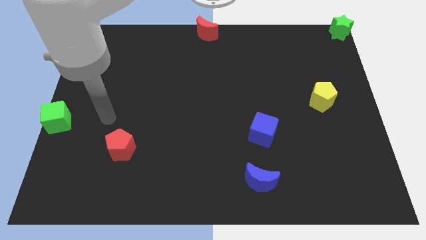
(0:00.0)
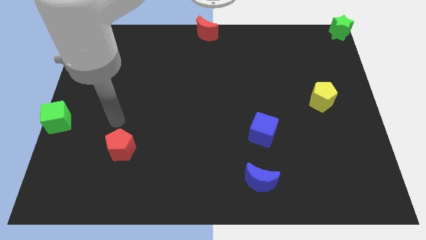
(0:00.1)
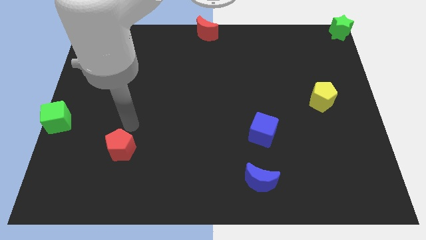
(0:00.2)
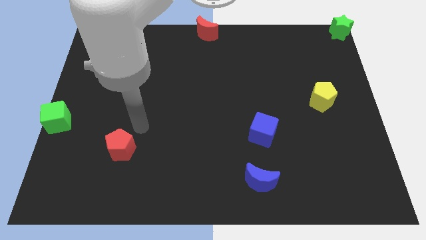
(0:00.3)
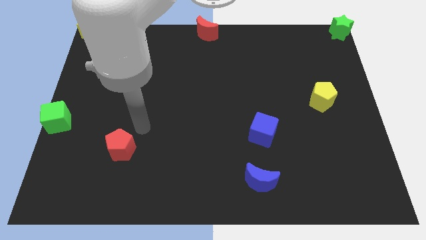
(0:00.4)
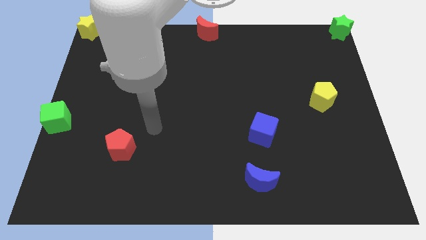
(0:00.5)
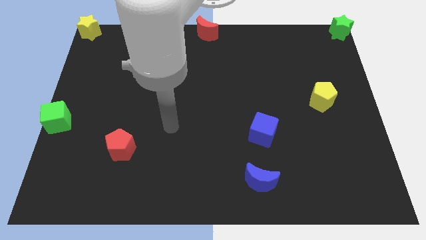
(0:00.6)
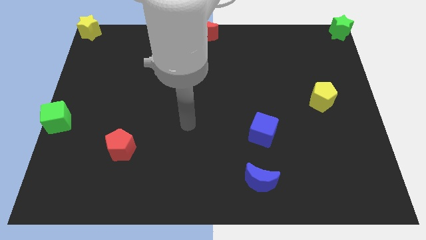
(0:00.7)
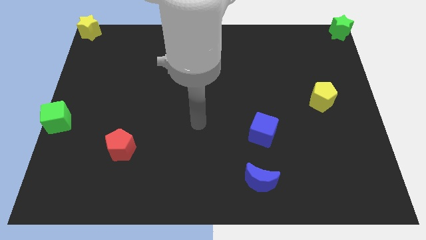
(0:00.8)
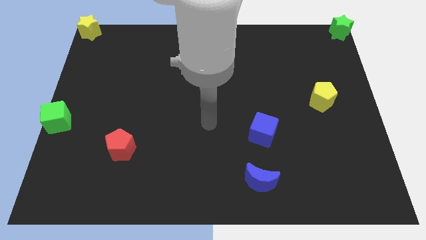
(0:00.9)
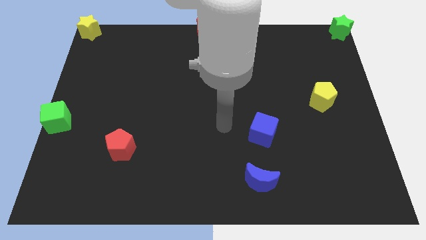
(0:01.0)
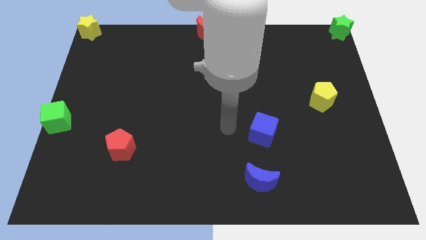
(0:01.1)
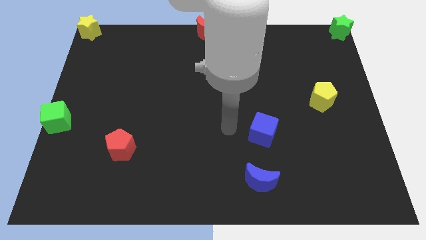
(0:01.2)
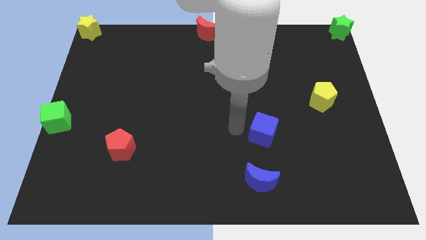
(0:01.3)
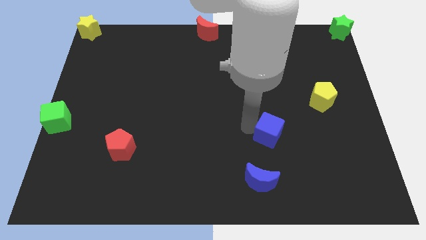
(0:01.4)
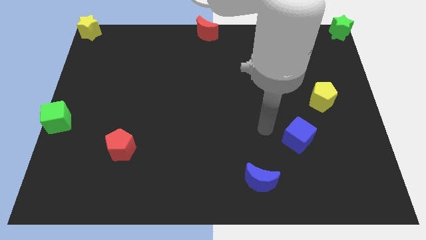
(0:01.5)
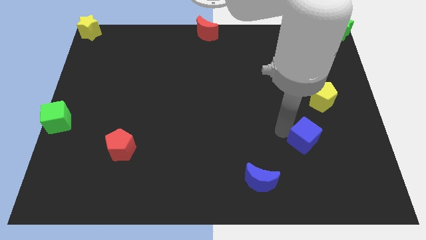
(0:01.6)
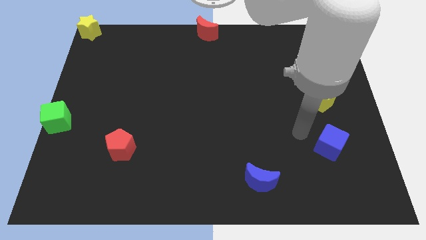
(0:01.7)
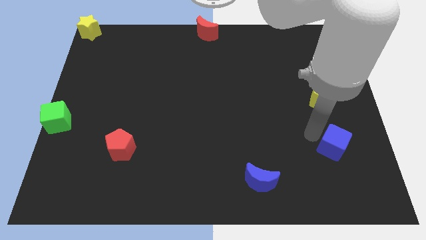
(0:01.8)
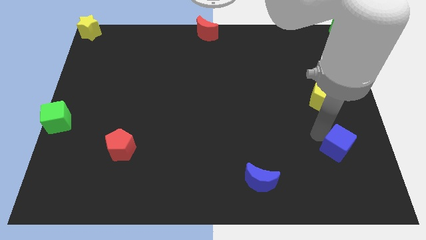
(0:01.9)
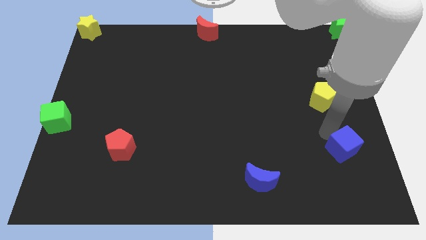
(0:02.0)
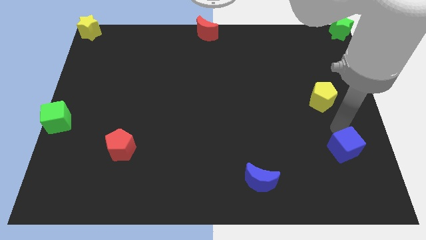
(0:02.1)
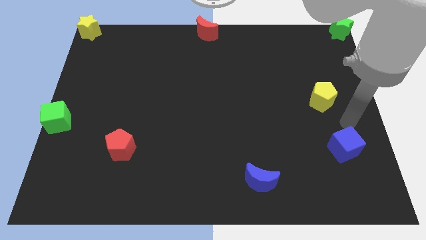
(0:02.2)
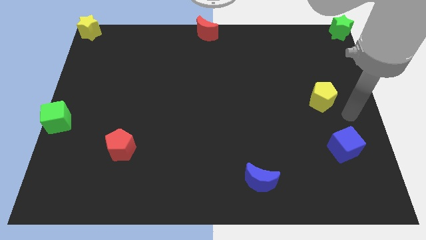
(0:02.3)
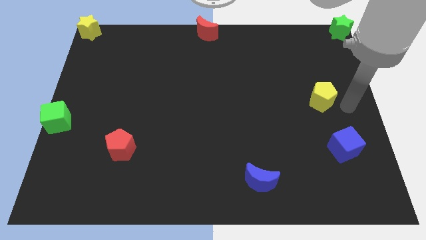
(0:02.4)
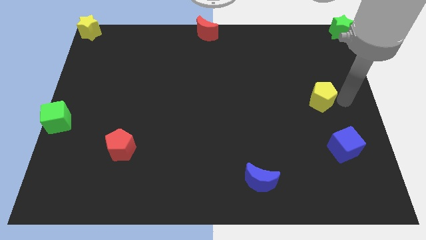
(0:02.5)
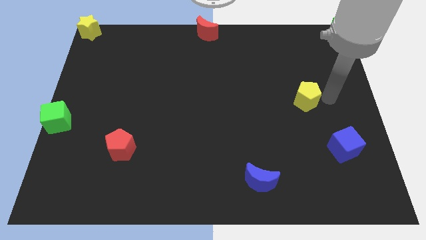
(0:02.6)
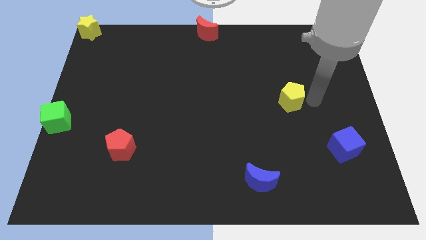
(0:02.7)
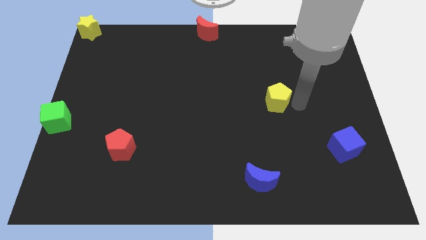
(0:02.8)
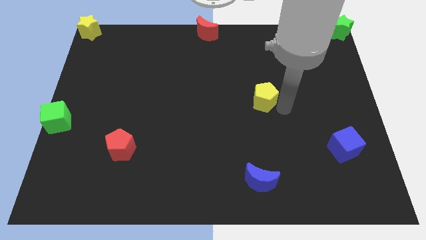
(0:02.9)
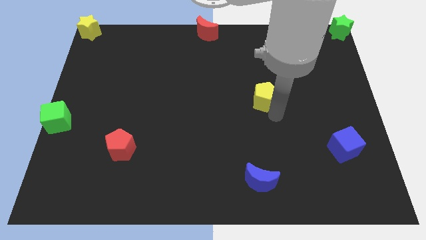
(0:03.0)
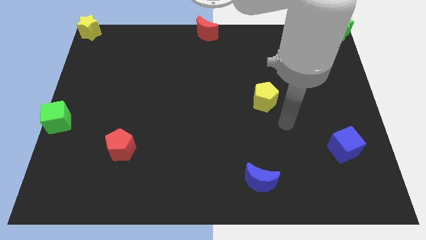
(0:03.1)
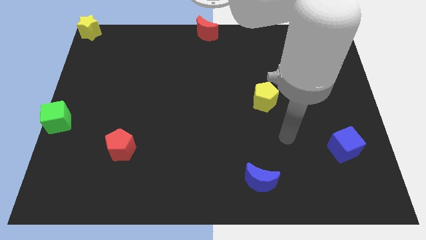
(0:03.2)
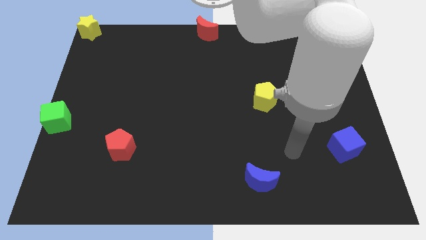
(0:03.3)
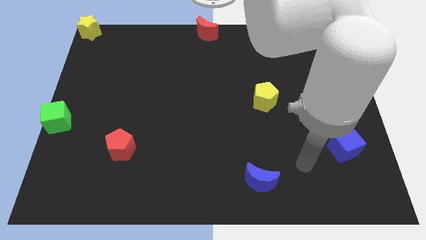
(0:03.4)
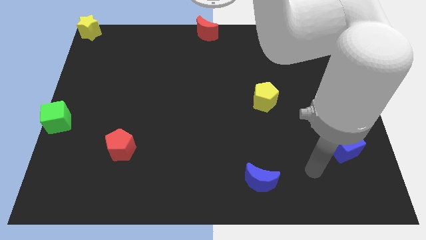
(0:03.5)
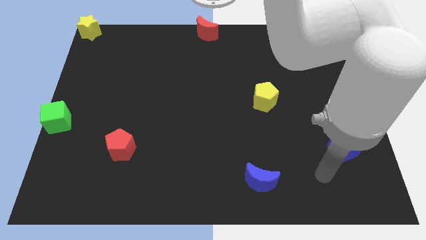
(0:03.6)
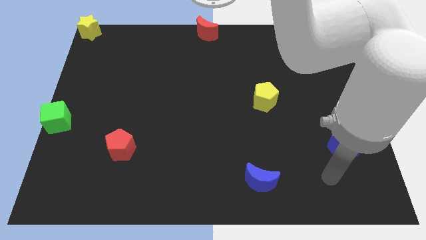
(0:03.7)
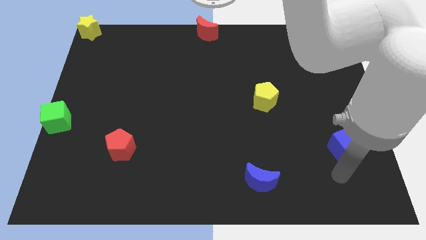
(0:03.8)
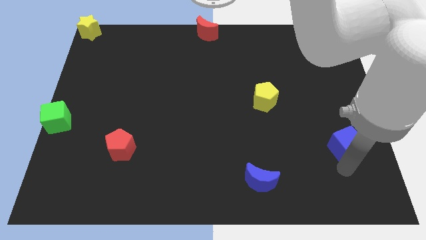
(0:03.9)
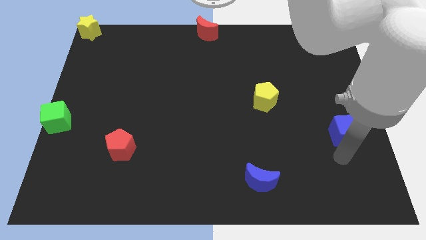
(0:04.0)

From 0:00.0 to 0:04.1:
make a triangle with the blue cube yellow pentagon and blue crescent at the right side of the board

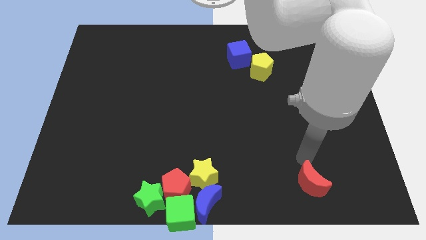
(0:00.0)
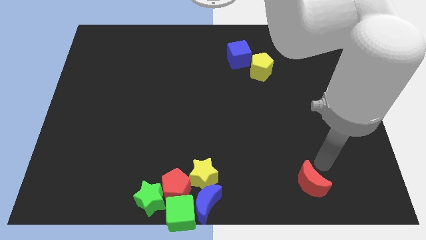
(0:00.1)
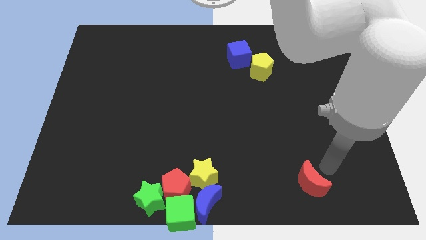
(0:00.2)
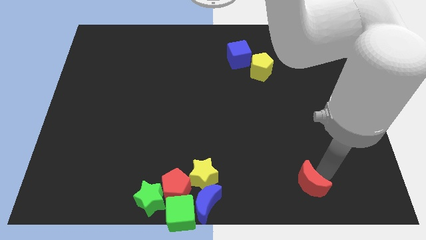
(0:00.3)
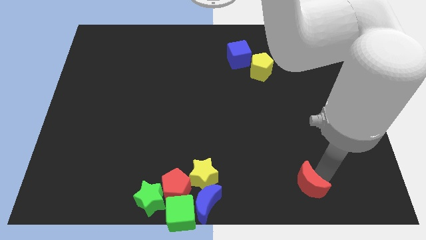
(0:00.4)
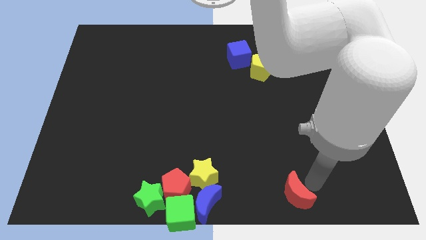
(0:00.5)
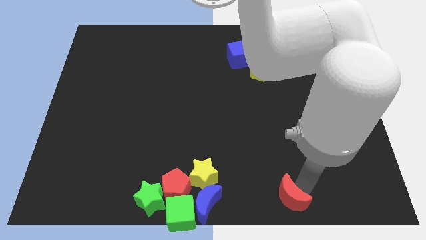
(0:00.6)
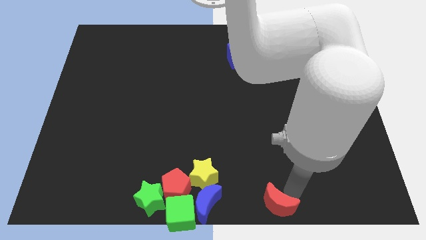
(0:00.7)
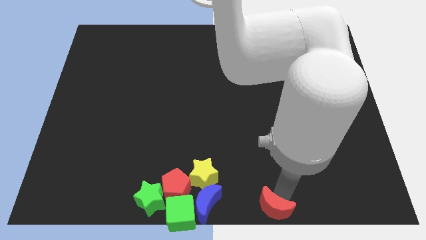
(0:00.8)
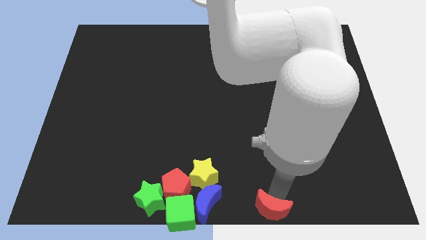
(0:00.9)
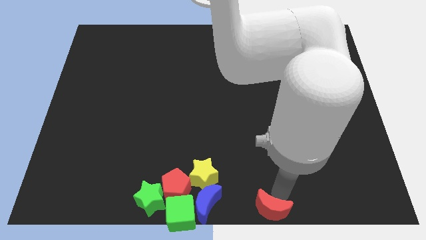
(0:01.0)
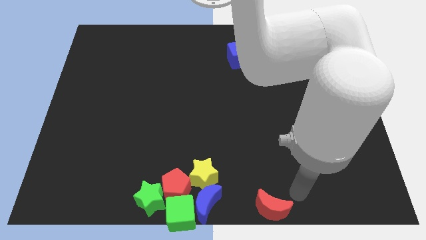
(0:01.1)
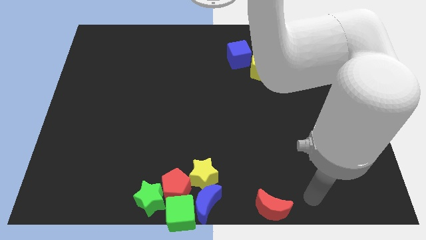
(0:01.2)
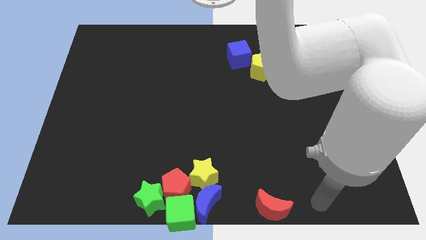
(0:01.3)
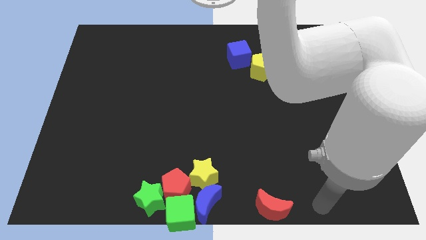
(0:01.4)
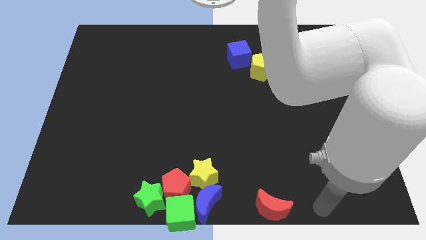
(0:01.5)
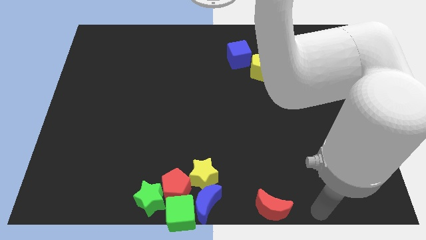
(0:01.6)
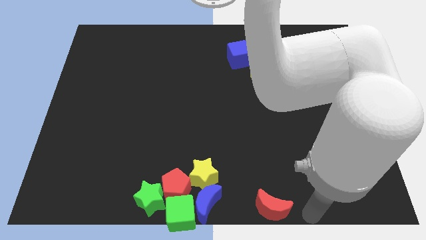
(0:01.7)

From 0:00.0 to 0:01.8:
push red crescent

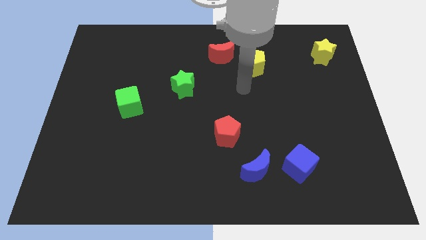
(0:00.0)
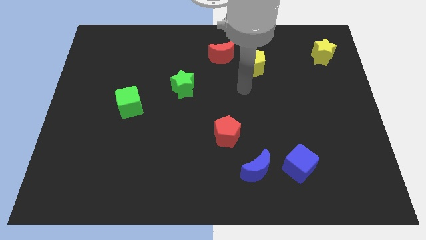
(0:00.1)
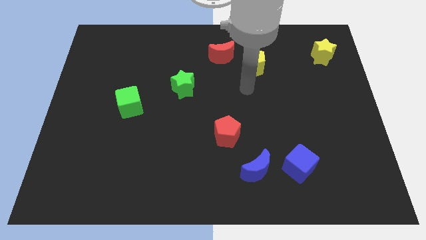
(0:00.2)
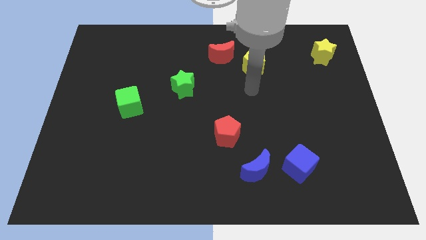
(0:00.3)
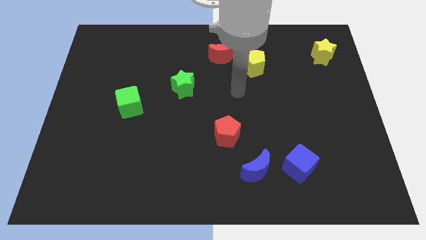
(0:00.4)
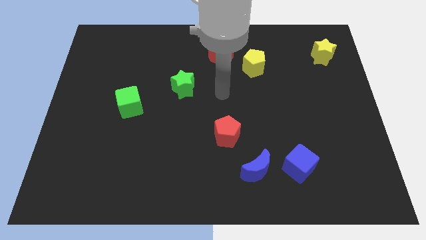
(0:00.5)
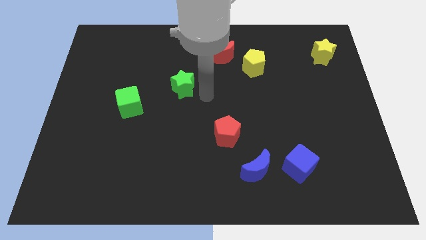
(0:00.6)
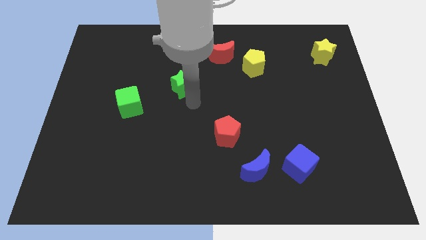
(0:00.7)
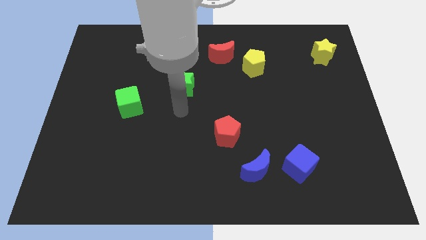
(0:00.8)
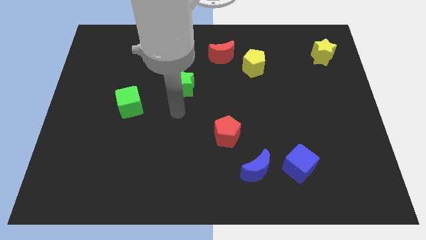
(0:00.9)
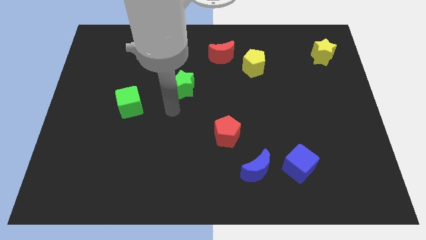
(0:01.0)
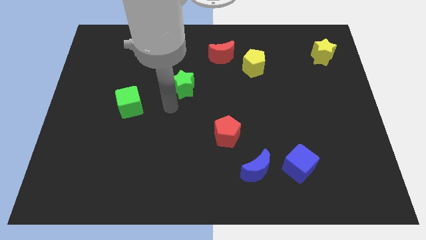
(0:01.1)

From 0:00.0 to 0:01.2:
move your arm towards the green star

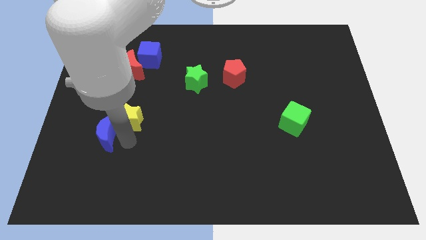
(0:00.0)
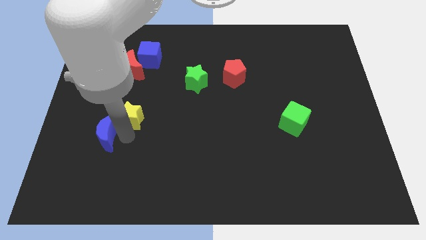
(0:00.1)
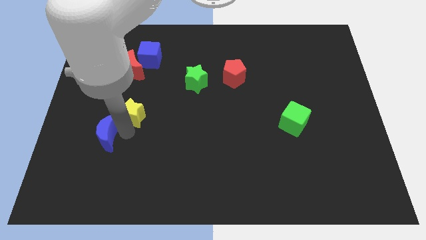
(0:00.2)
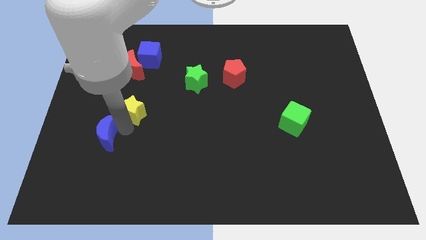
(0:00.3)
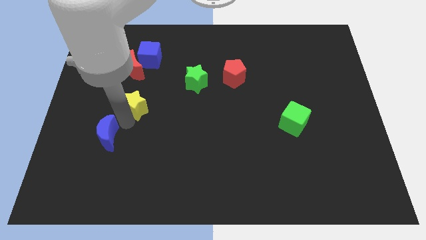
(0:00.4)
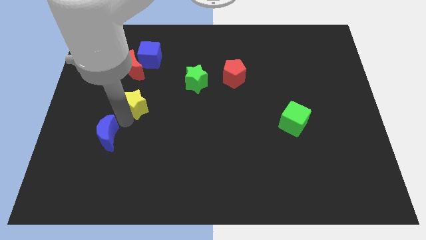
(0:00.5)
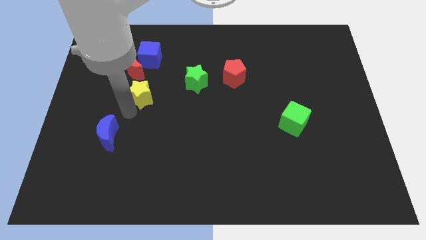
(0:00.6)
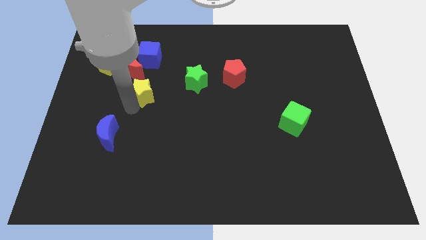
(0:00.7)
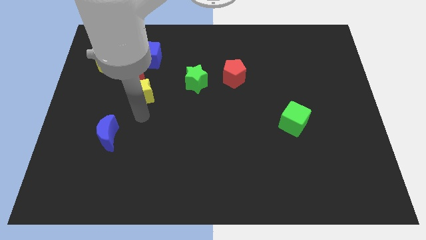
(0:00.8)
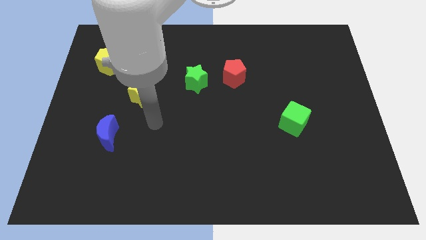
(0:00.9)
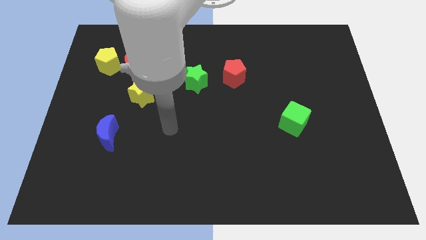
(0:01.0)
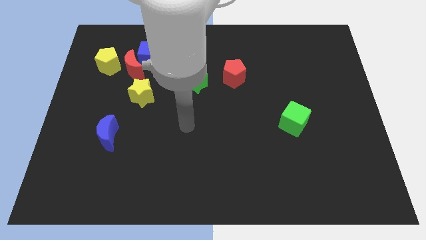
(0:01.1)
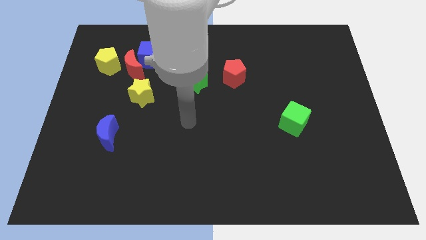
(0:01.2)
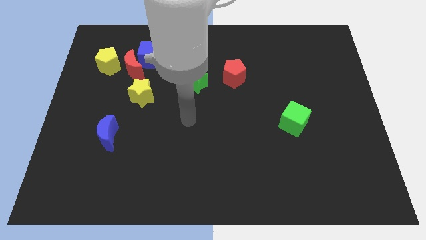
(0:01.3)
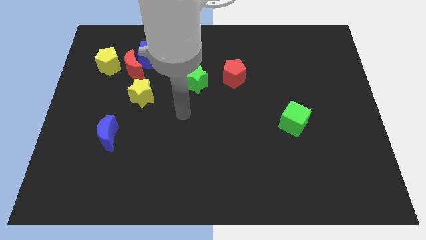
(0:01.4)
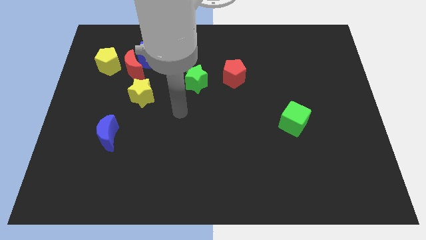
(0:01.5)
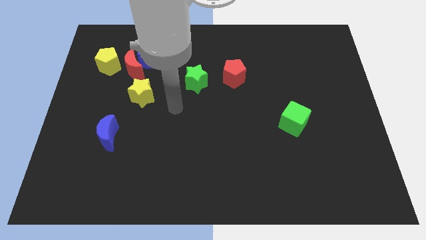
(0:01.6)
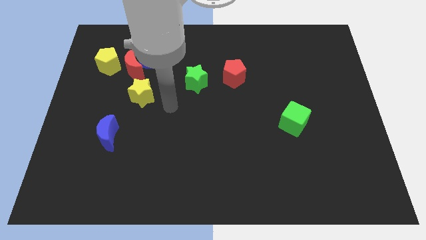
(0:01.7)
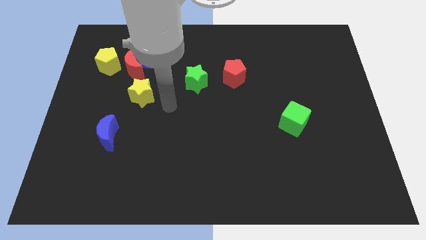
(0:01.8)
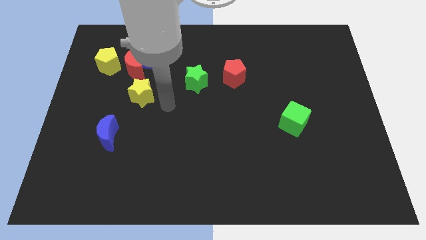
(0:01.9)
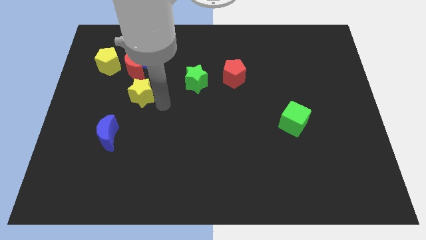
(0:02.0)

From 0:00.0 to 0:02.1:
slide the yellow star to the bottom of the red moon
